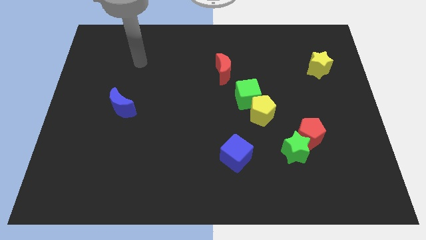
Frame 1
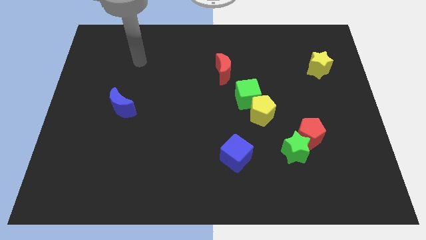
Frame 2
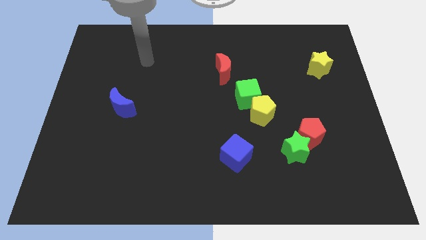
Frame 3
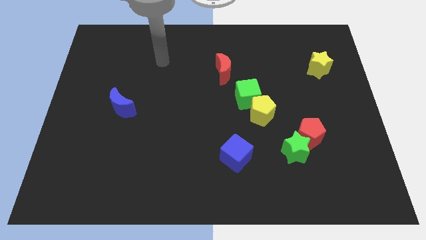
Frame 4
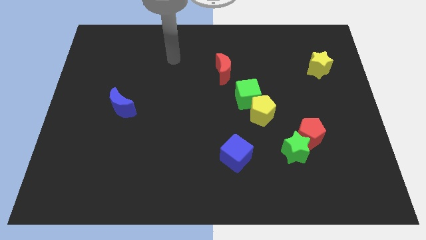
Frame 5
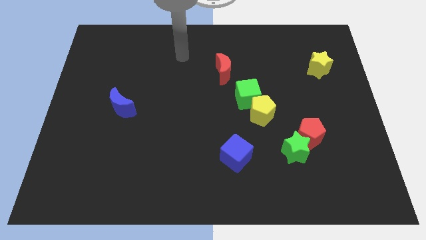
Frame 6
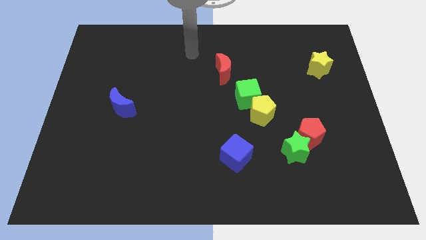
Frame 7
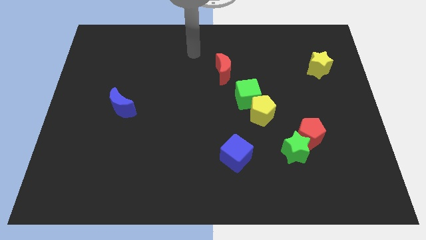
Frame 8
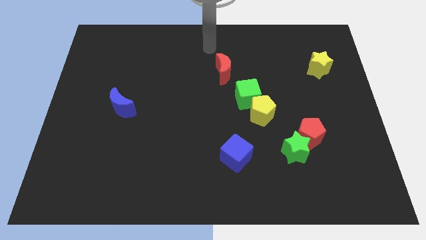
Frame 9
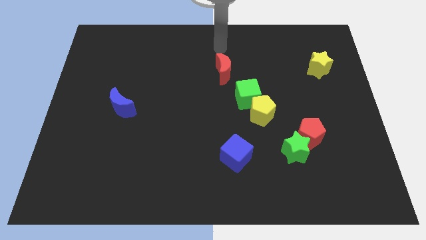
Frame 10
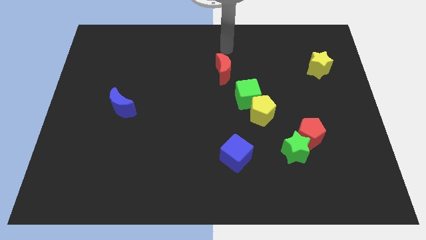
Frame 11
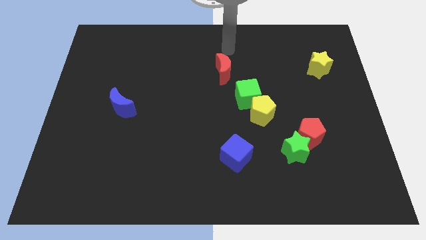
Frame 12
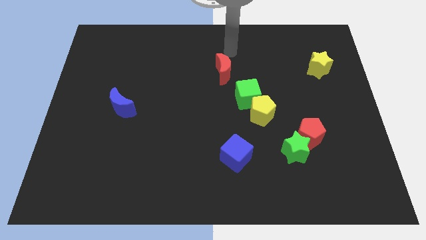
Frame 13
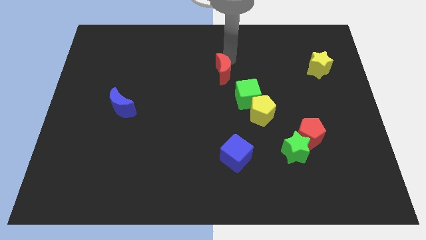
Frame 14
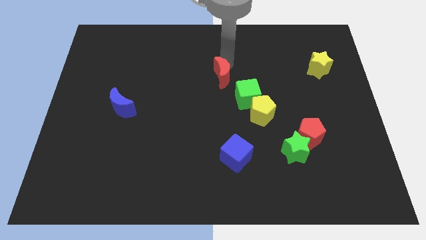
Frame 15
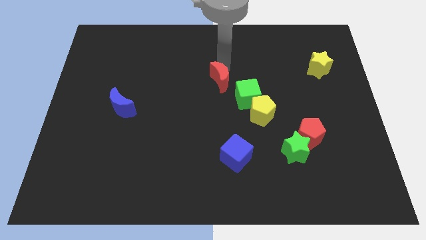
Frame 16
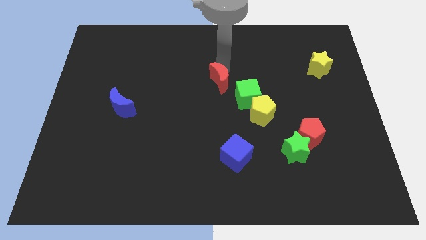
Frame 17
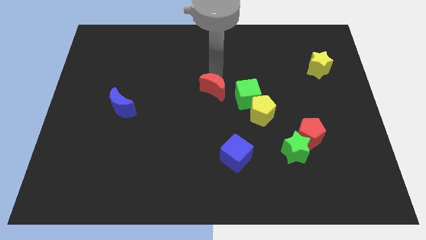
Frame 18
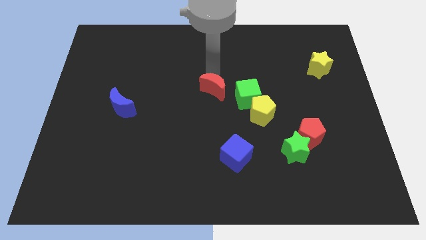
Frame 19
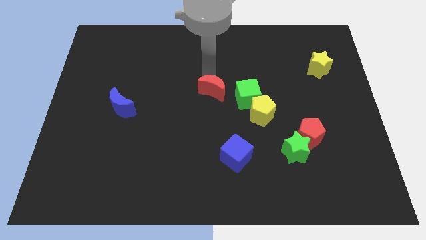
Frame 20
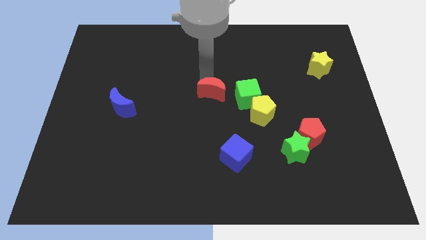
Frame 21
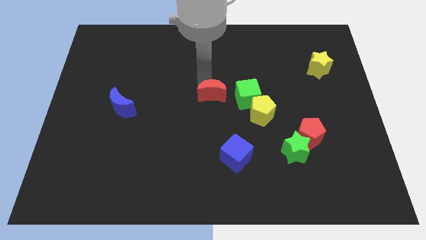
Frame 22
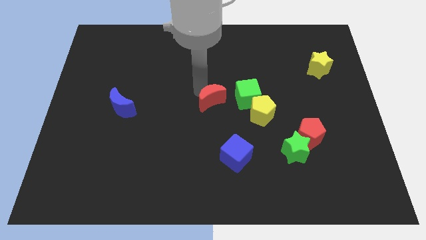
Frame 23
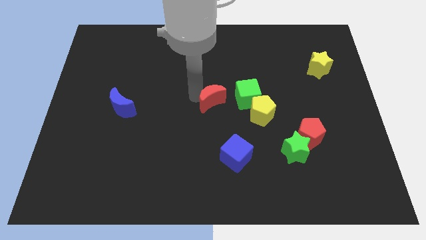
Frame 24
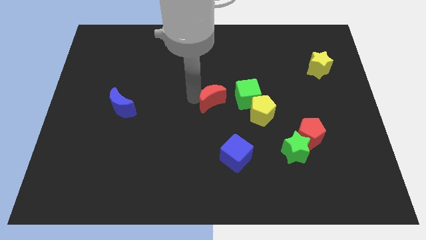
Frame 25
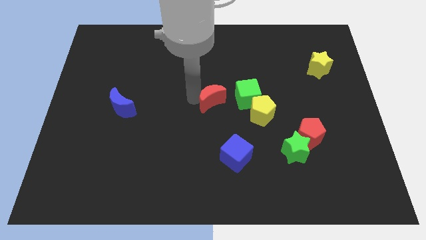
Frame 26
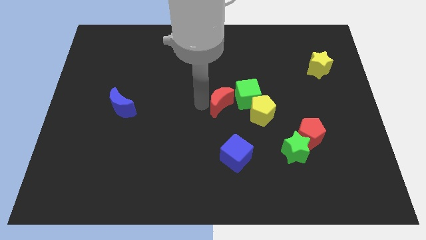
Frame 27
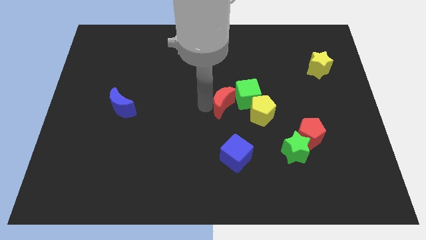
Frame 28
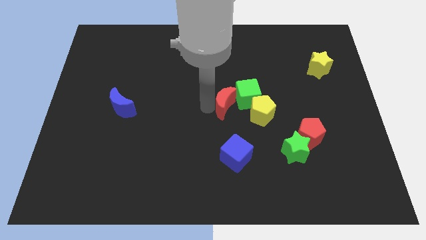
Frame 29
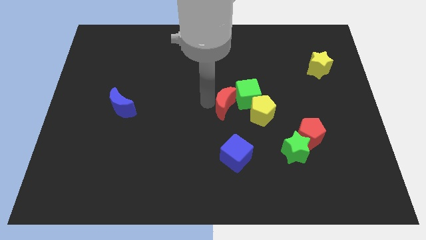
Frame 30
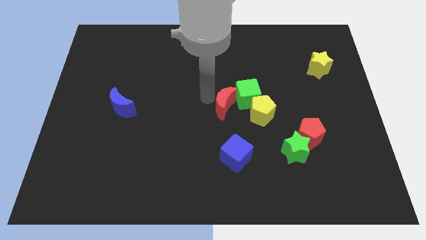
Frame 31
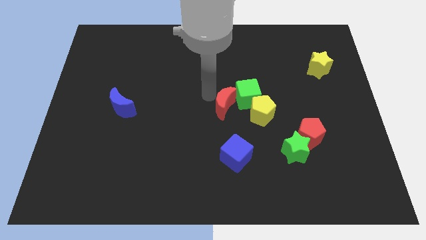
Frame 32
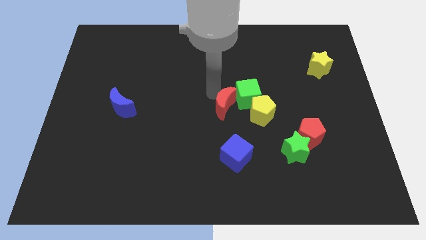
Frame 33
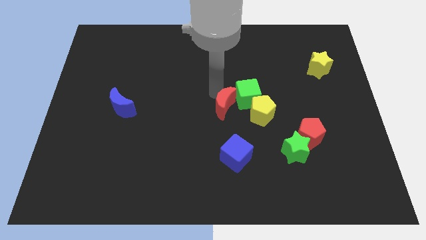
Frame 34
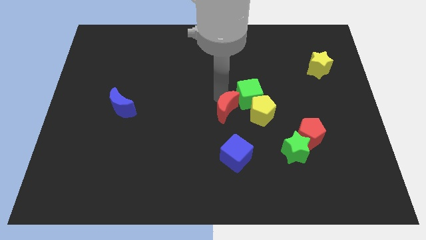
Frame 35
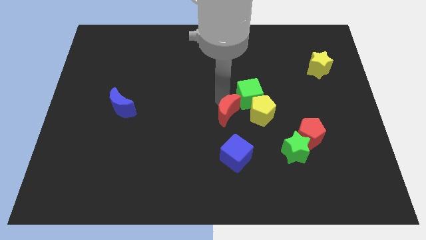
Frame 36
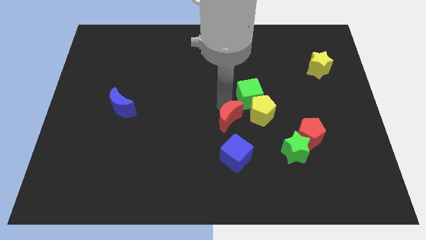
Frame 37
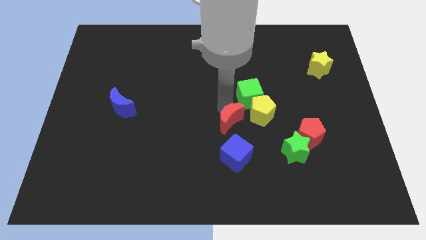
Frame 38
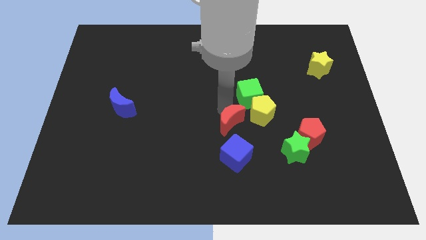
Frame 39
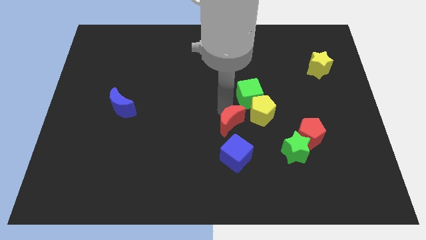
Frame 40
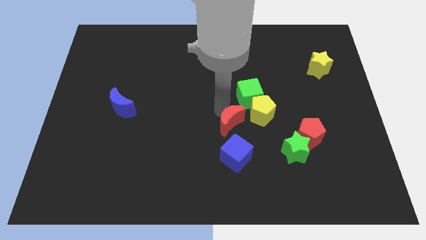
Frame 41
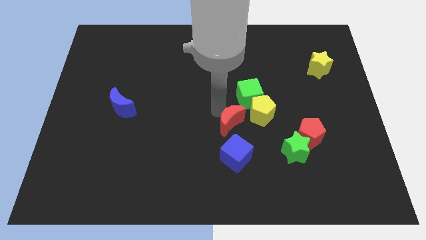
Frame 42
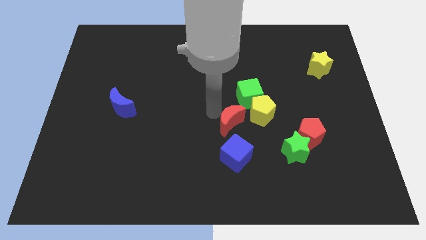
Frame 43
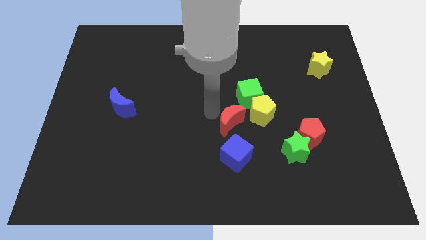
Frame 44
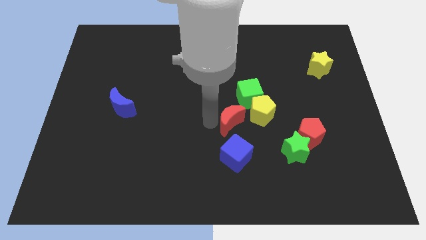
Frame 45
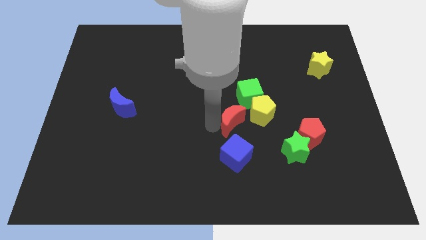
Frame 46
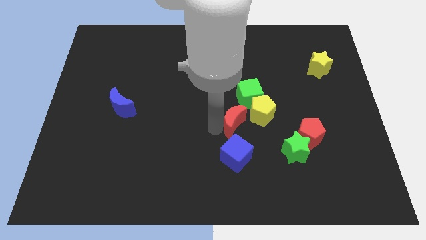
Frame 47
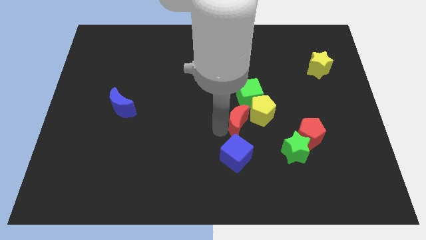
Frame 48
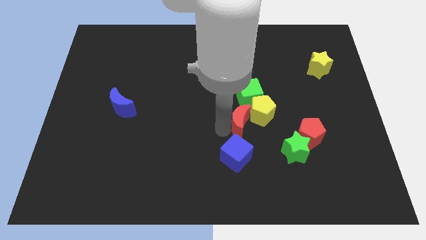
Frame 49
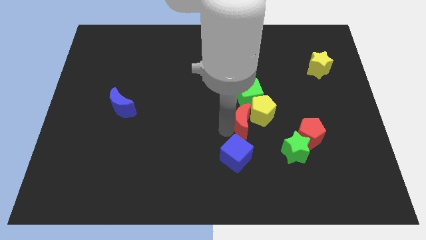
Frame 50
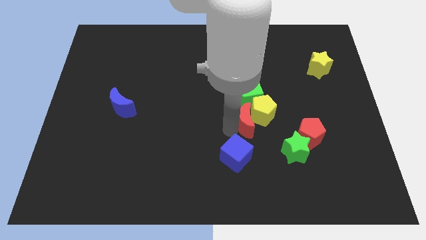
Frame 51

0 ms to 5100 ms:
move the red moon next to the yellow pentagon

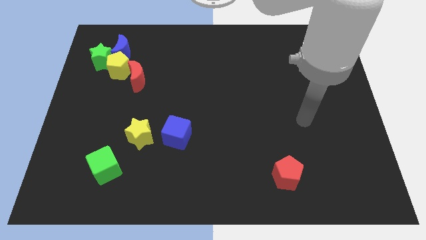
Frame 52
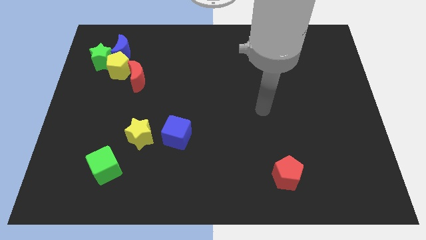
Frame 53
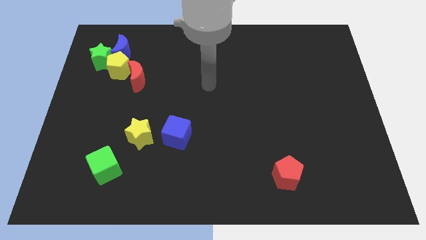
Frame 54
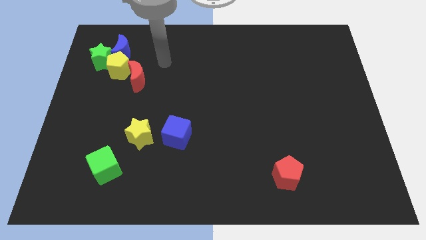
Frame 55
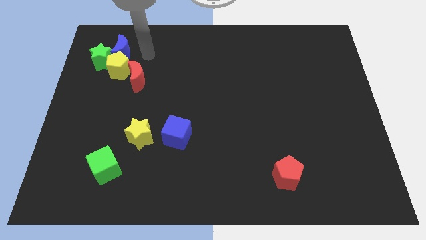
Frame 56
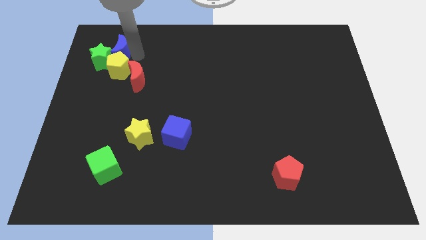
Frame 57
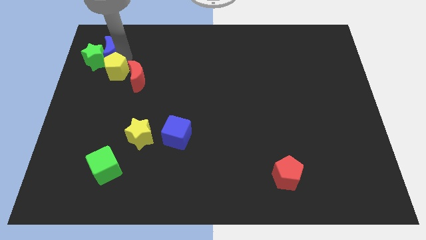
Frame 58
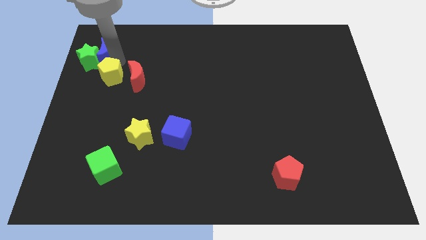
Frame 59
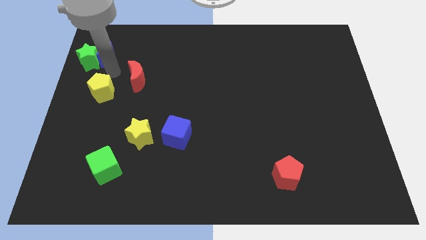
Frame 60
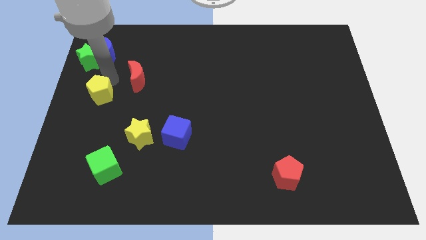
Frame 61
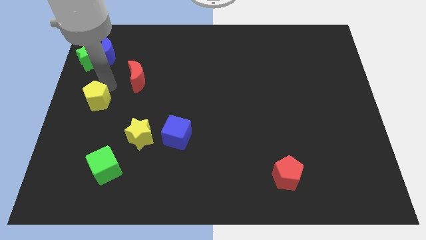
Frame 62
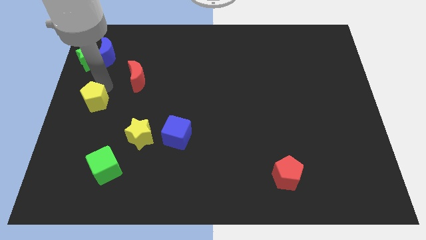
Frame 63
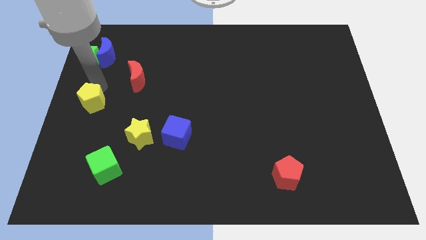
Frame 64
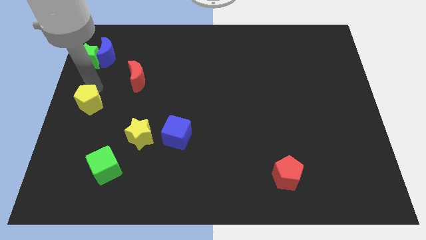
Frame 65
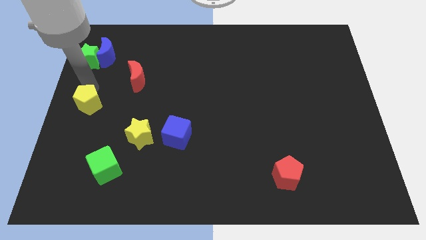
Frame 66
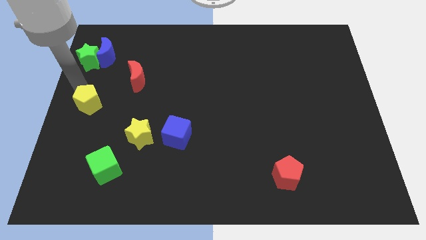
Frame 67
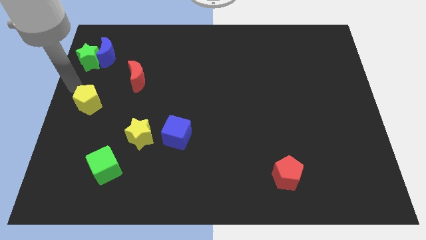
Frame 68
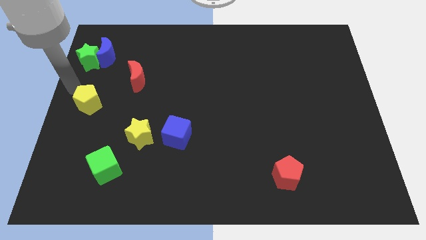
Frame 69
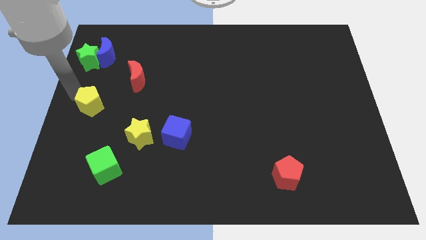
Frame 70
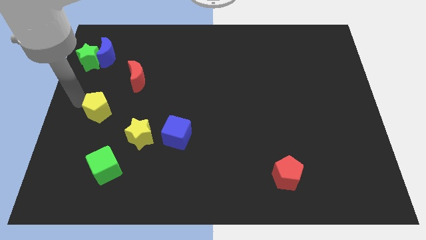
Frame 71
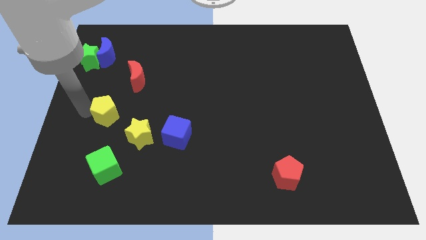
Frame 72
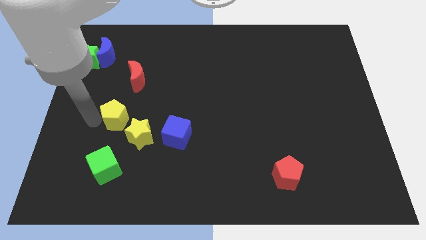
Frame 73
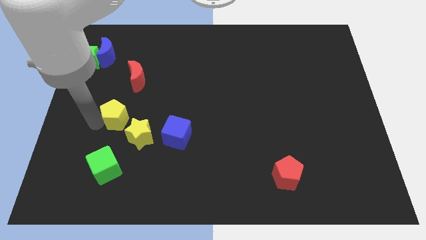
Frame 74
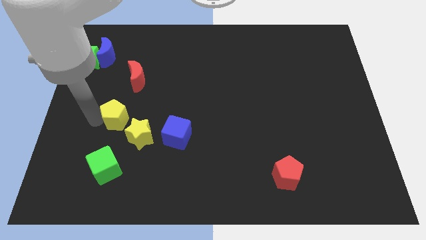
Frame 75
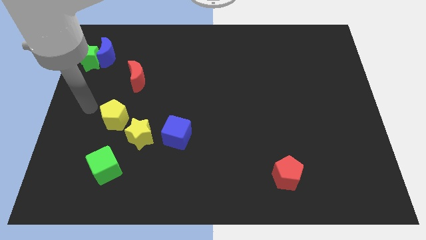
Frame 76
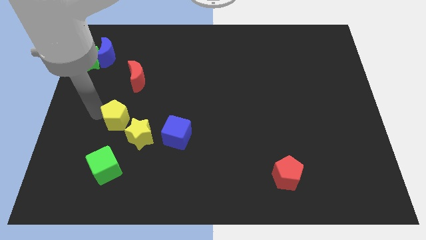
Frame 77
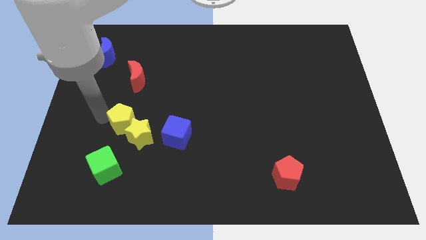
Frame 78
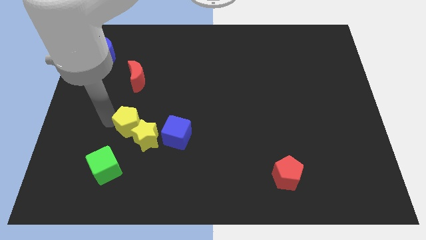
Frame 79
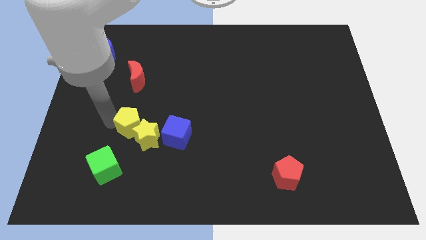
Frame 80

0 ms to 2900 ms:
push the yellow pentagon close to the yellow star

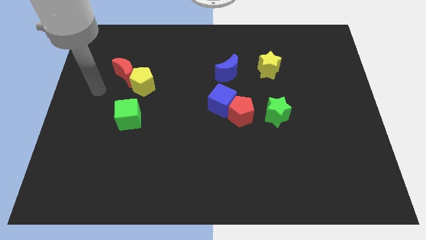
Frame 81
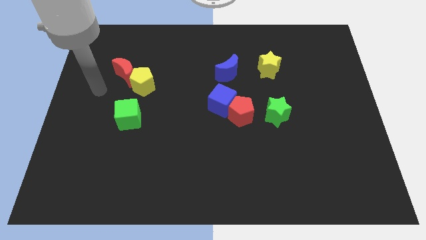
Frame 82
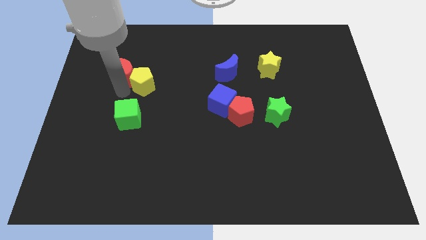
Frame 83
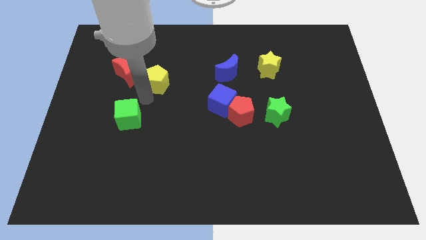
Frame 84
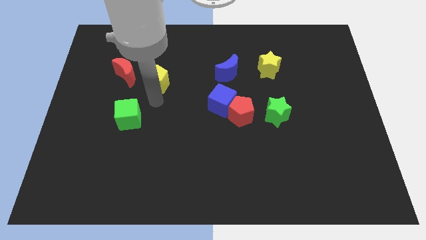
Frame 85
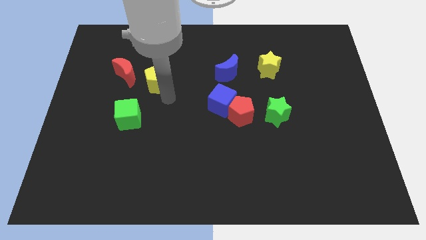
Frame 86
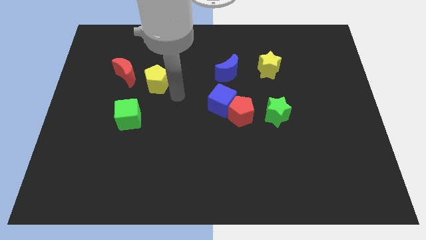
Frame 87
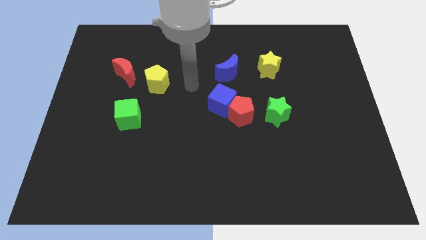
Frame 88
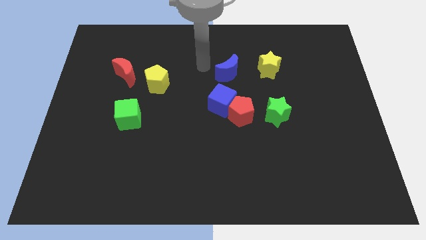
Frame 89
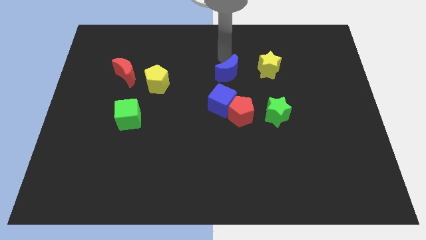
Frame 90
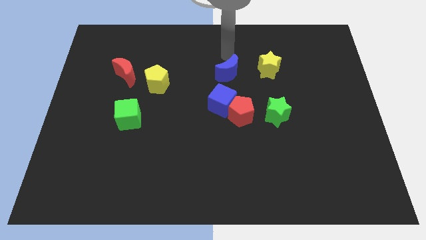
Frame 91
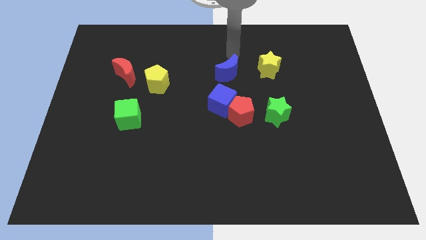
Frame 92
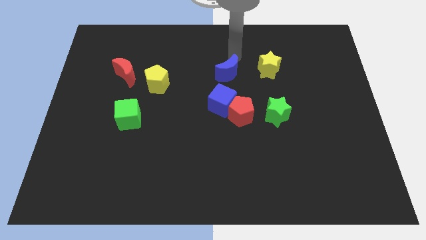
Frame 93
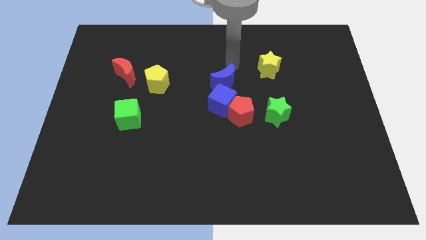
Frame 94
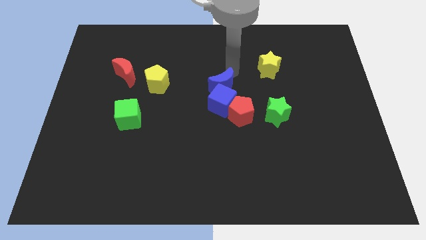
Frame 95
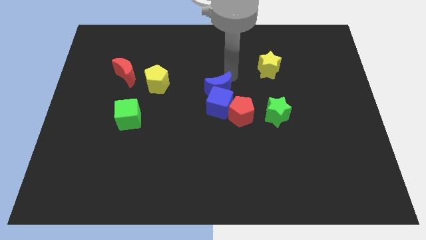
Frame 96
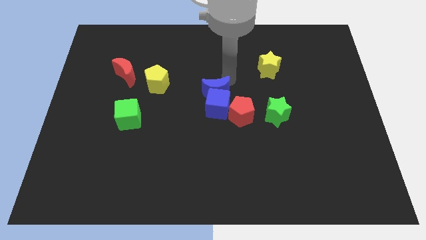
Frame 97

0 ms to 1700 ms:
move the blue moon next to the blue cube
